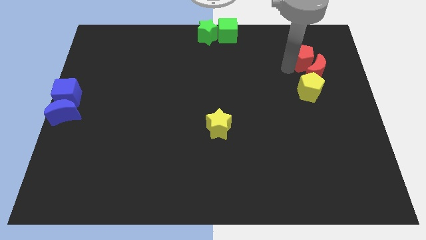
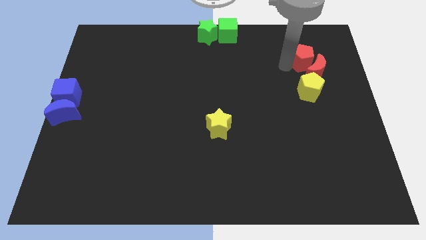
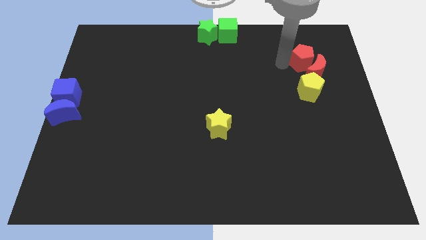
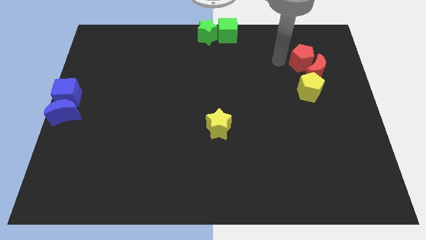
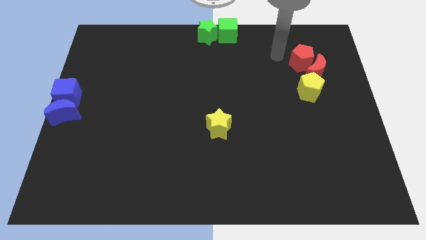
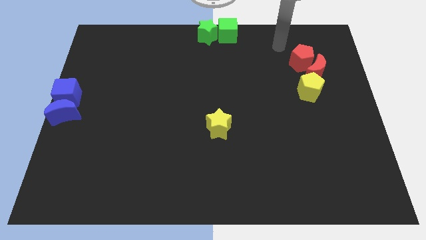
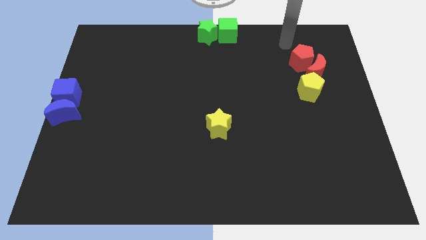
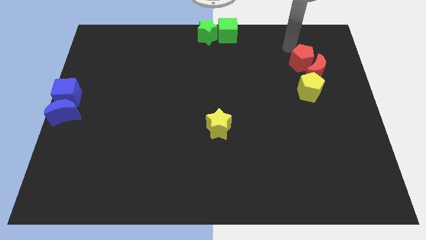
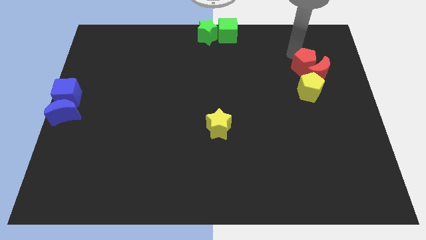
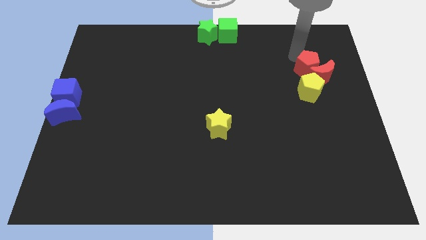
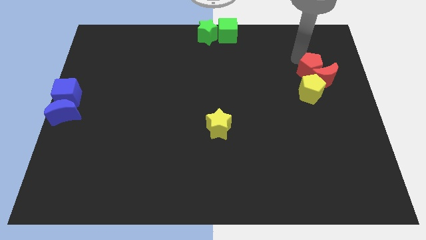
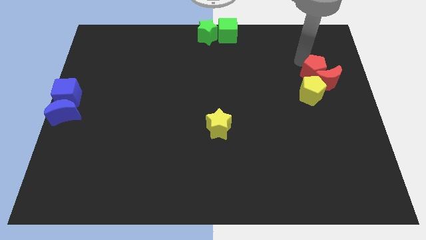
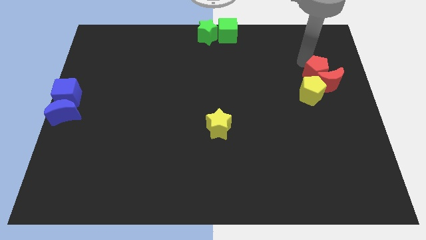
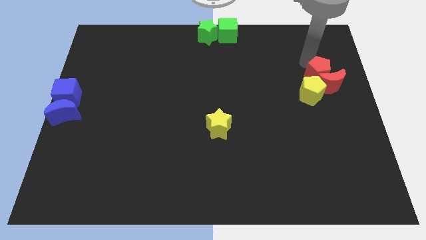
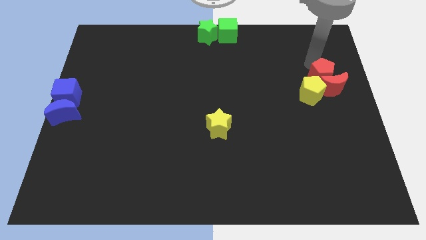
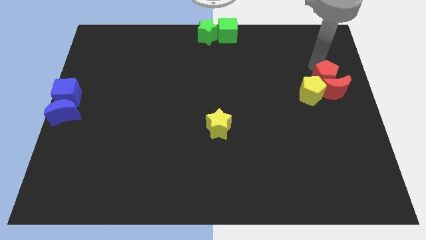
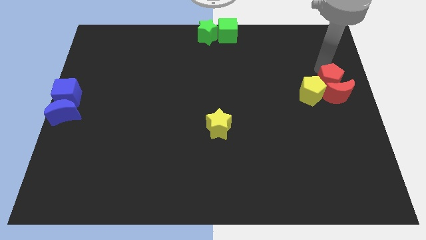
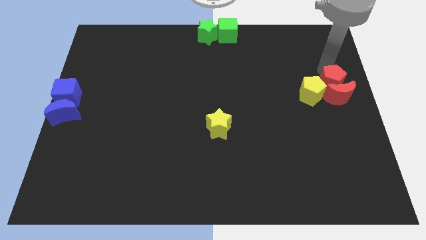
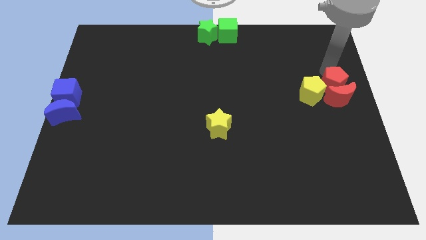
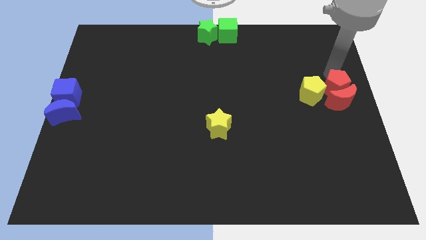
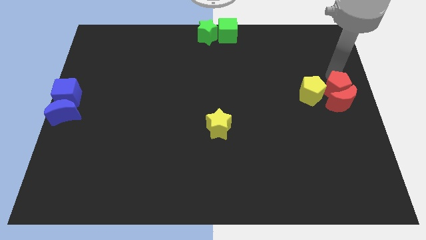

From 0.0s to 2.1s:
push red crescent with red pentagon

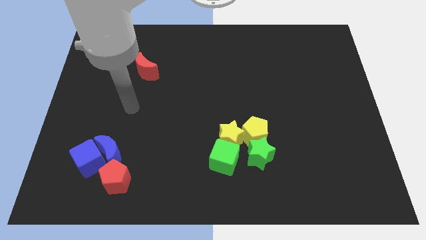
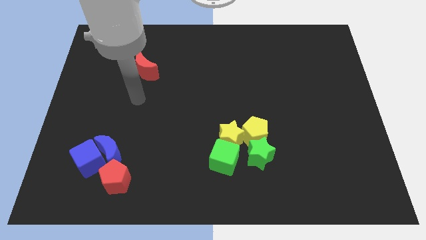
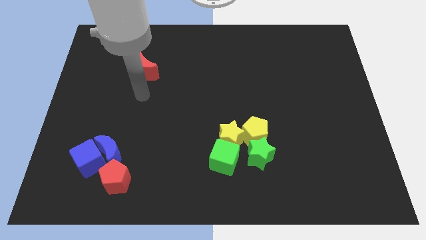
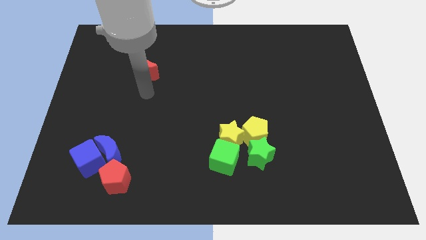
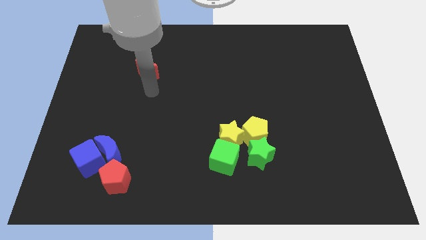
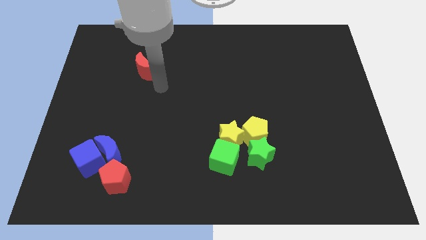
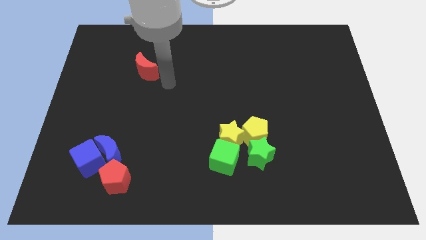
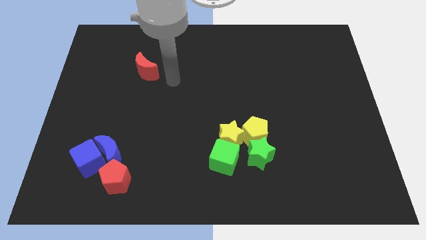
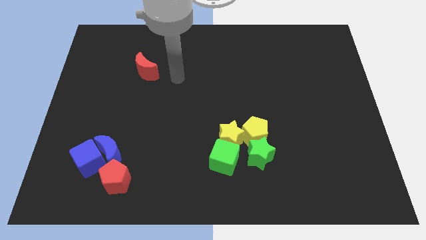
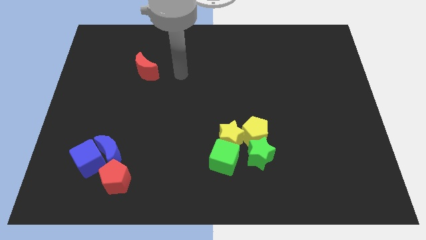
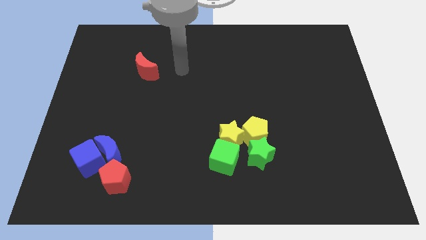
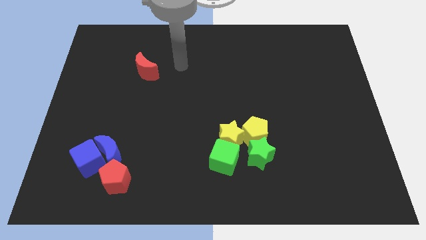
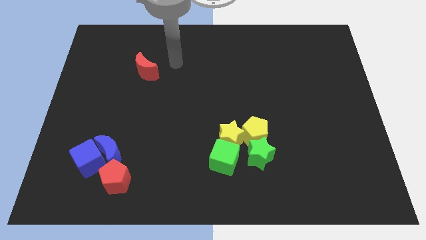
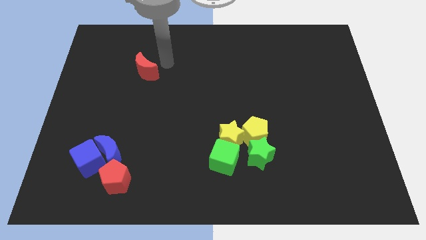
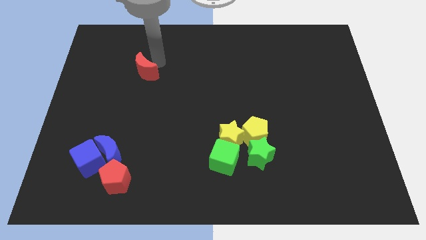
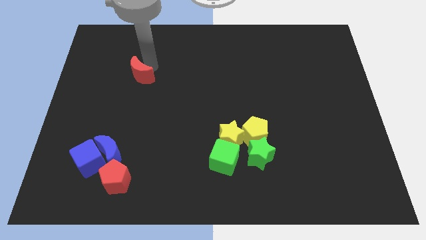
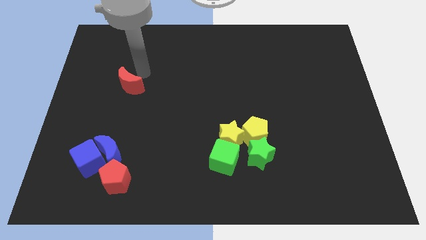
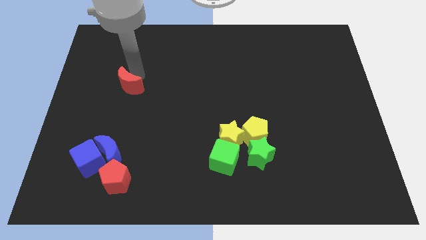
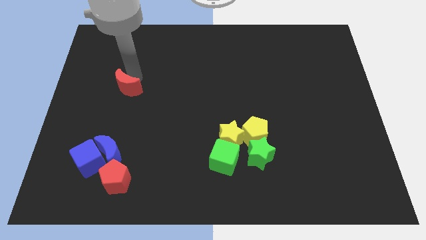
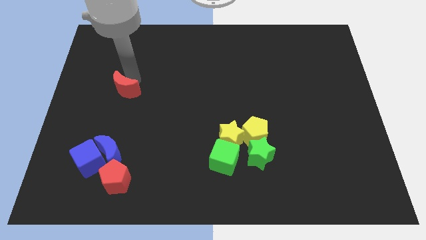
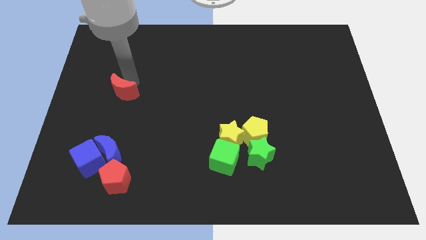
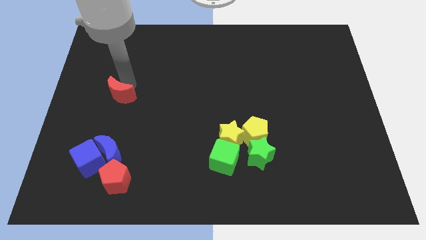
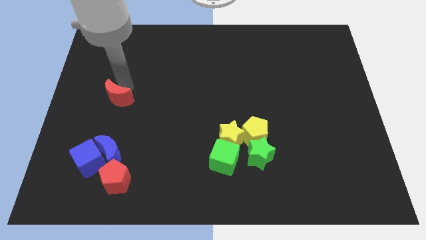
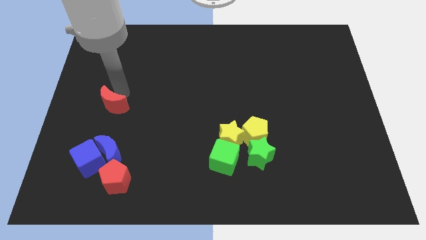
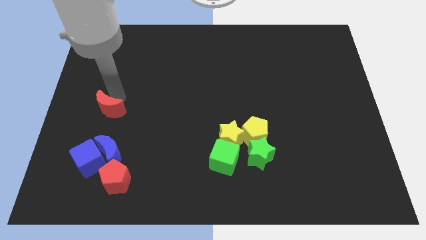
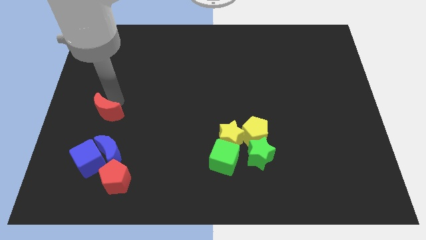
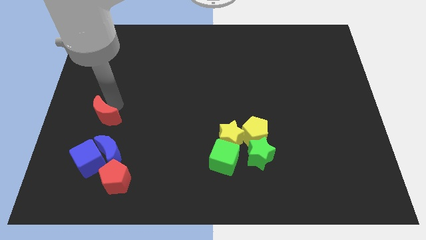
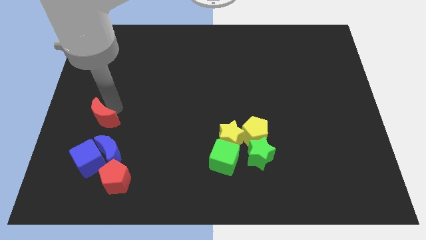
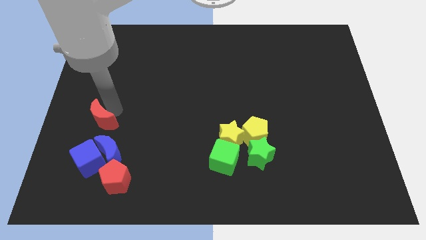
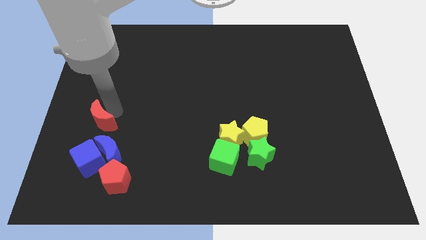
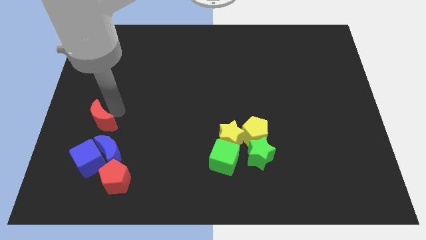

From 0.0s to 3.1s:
drag the red crescent downwards

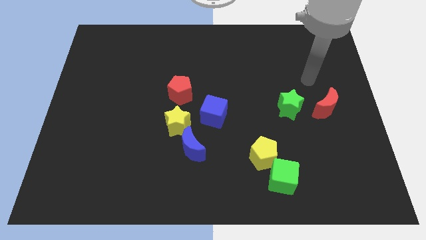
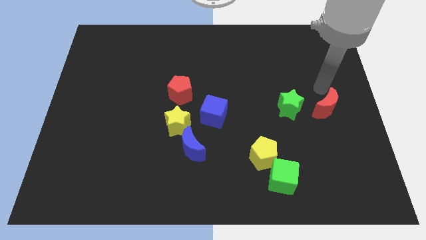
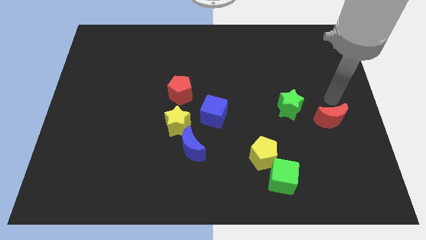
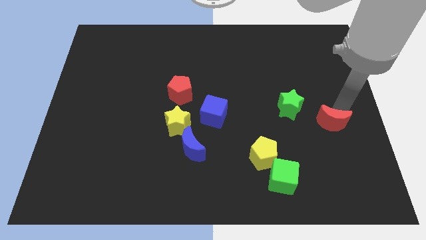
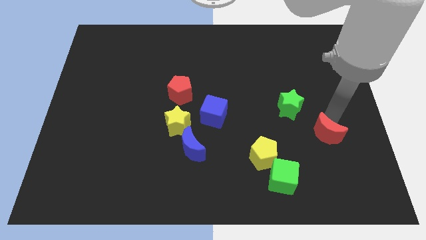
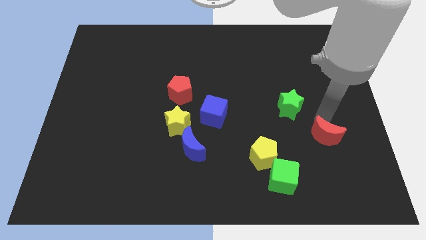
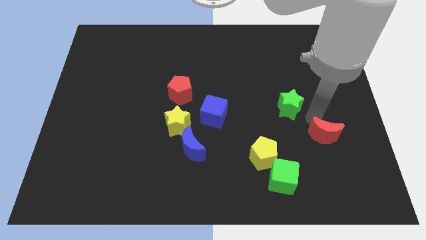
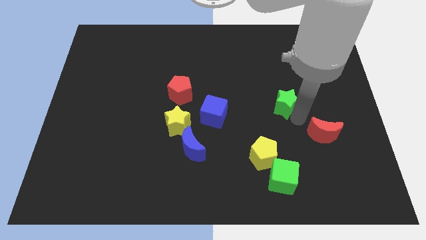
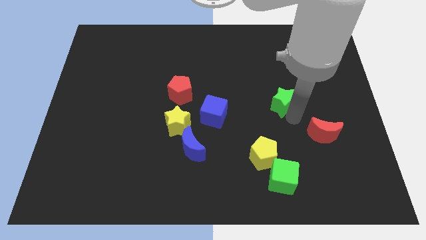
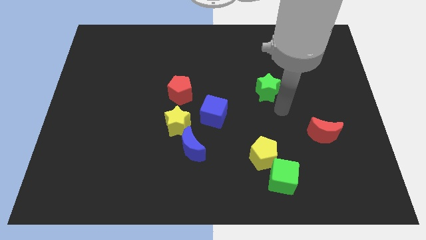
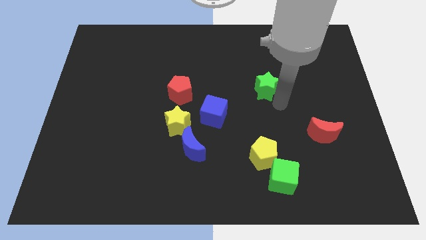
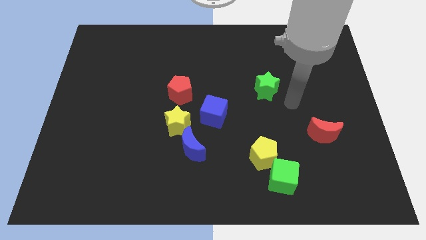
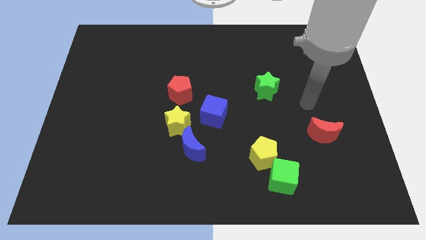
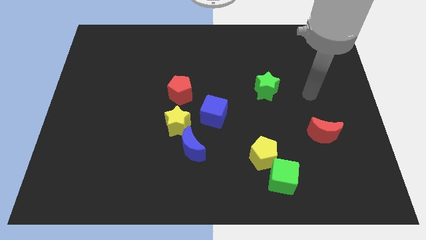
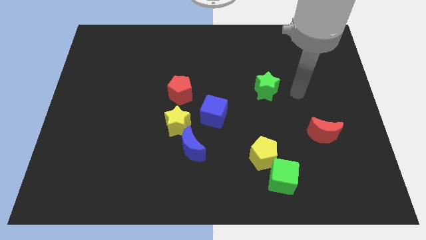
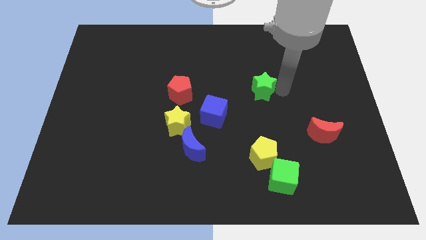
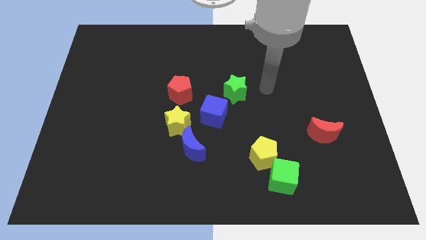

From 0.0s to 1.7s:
place the green star diagonally top right to the blue cube

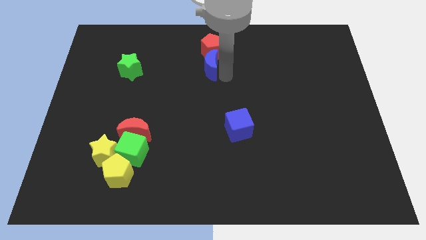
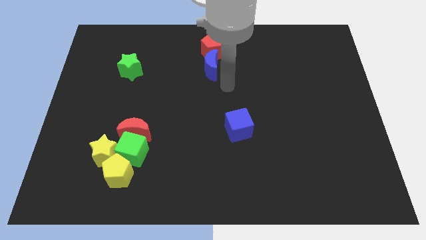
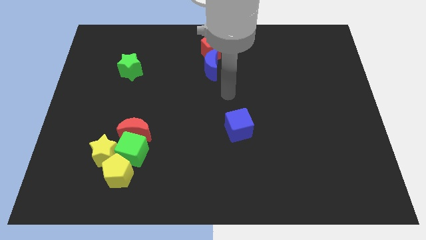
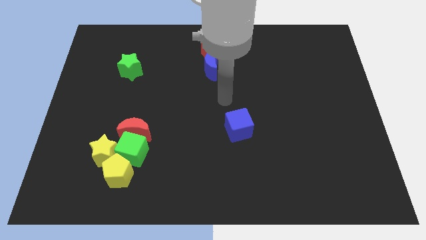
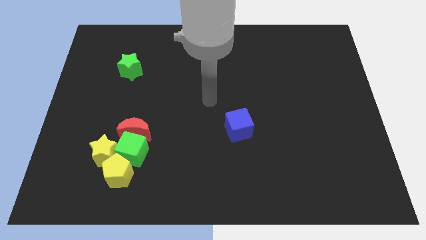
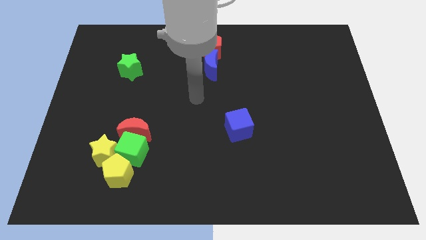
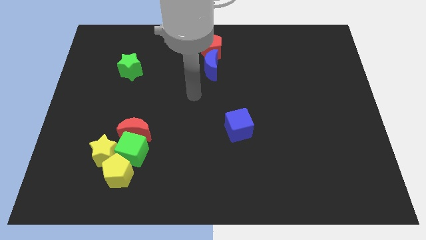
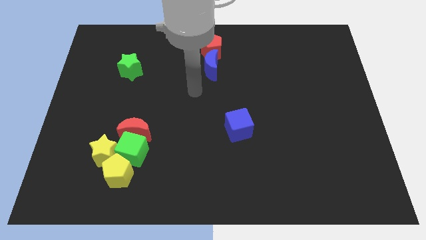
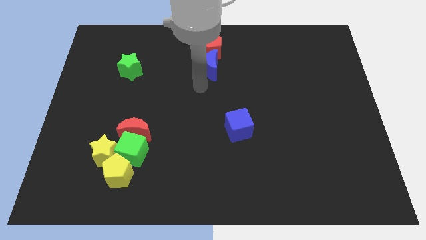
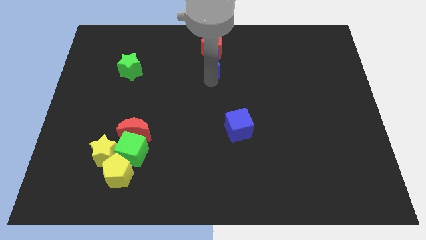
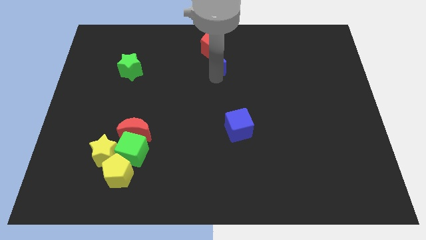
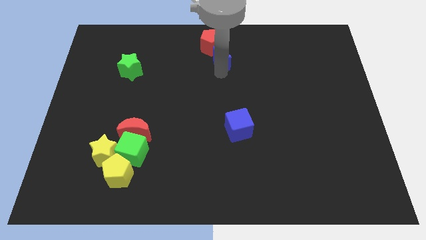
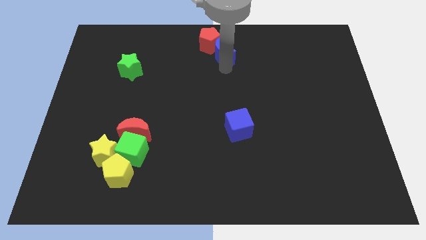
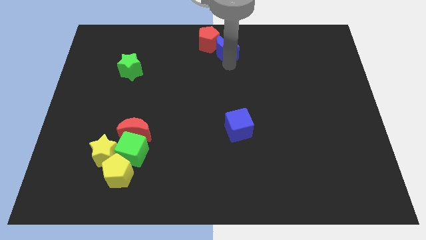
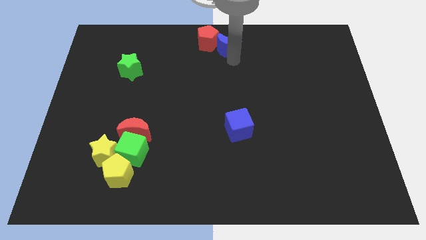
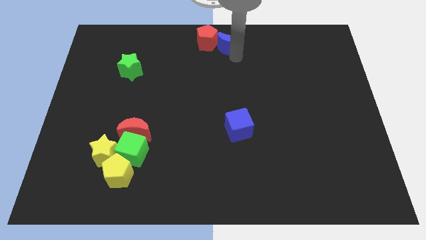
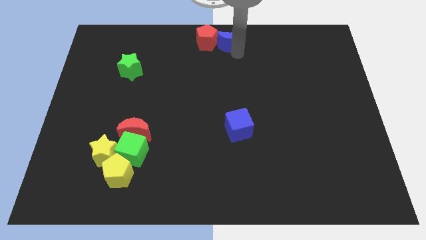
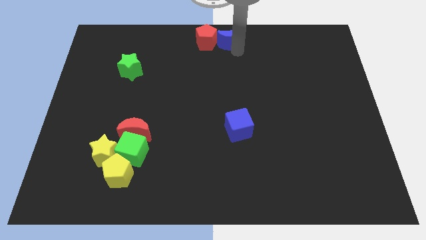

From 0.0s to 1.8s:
slide the blue moon parallel right to the red pentagon

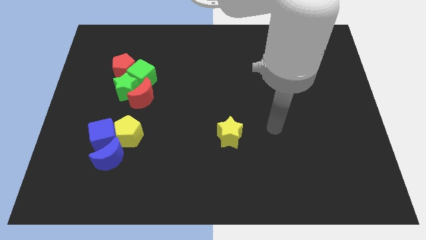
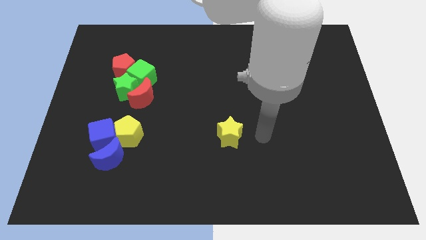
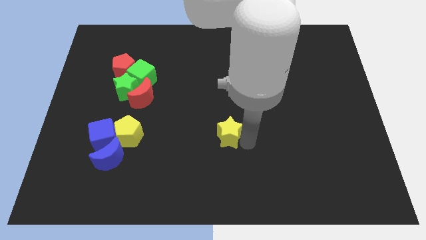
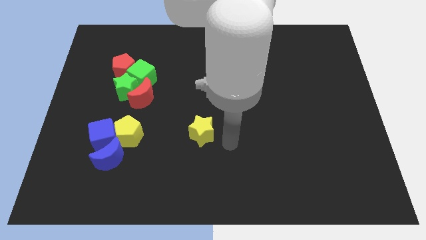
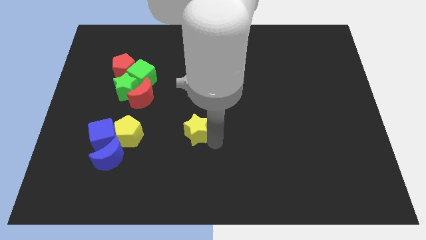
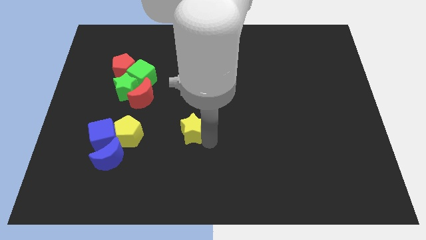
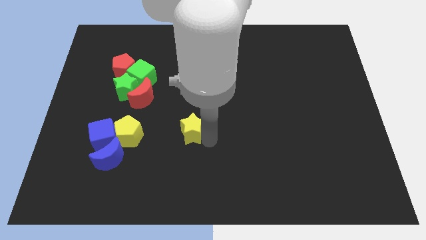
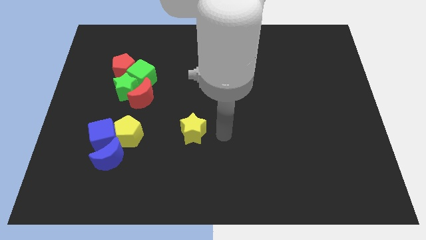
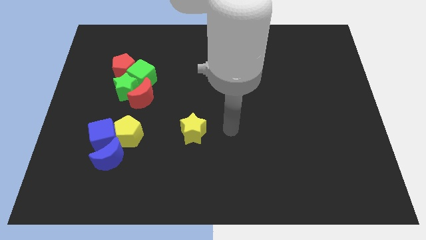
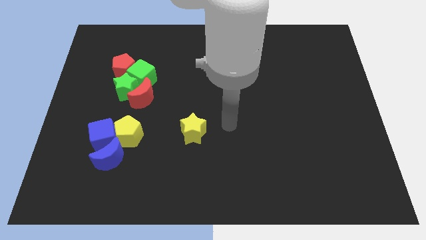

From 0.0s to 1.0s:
push the yellow star towards the yellow pentagon
